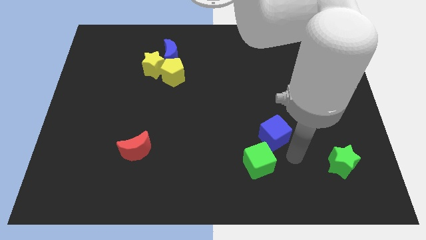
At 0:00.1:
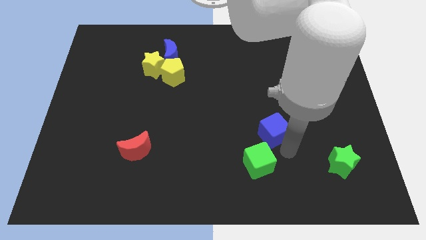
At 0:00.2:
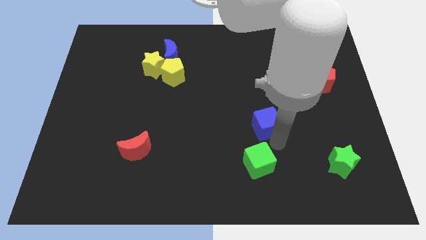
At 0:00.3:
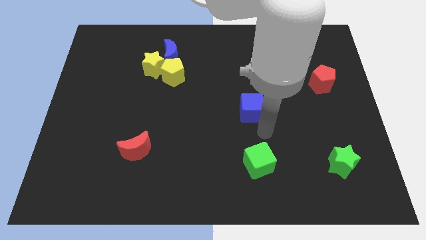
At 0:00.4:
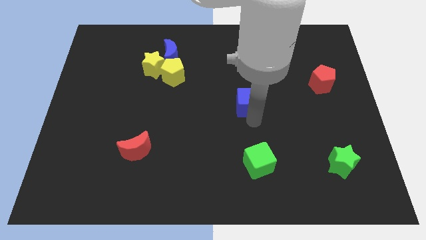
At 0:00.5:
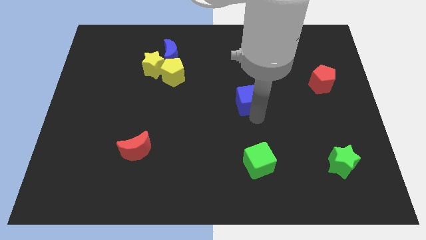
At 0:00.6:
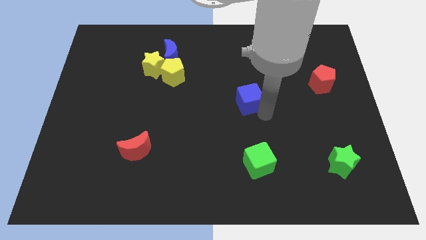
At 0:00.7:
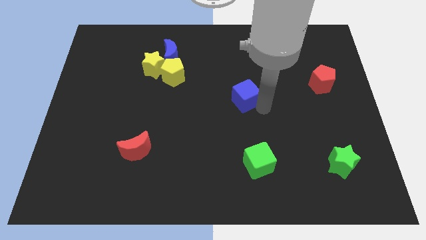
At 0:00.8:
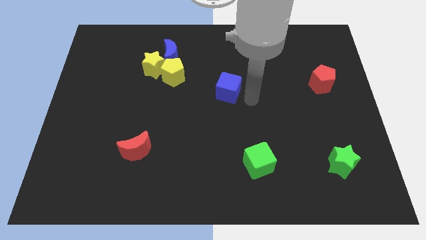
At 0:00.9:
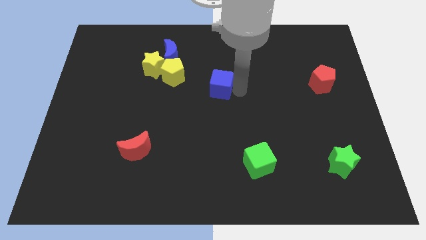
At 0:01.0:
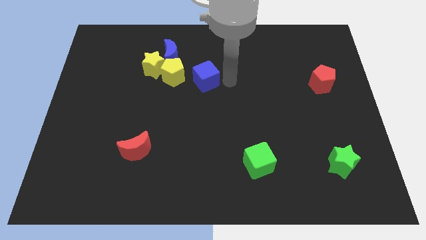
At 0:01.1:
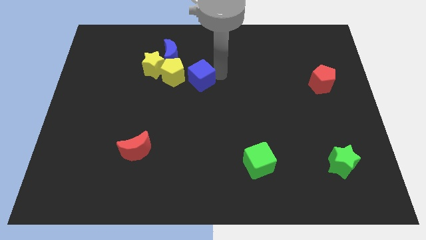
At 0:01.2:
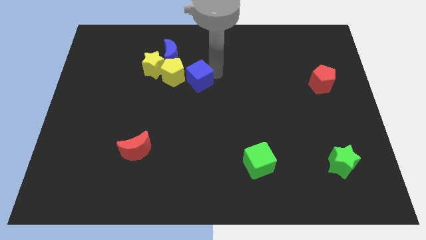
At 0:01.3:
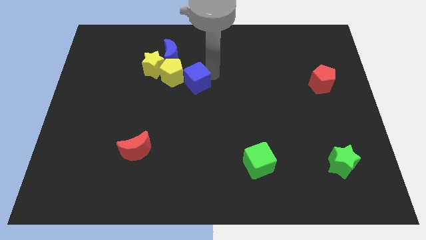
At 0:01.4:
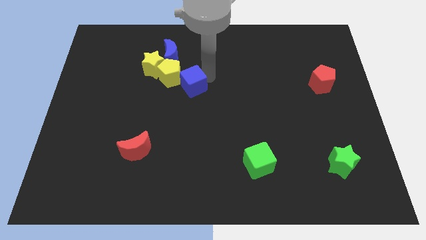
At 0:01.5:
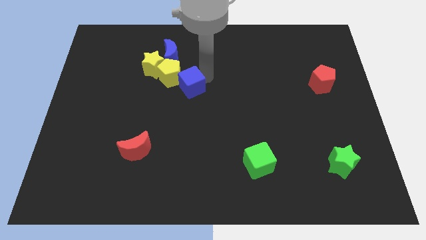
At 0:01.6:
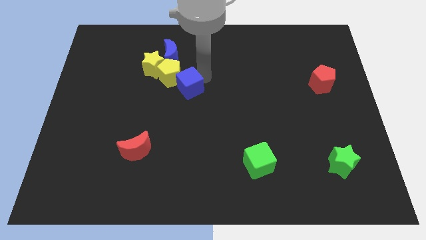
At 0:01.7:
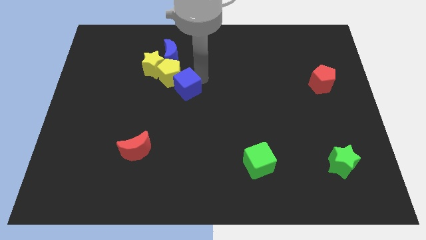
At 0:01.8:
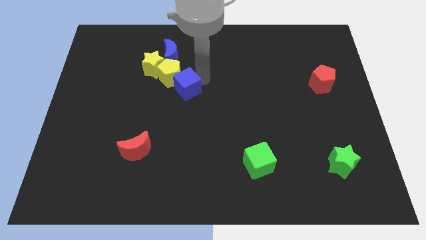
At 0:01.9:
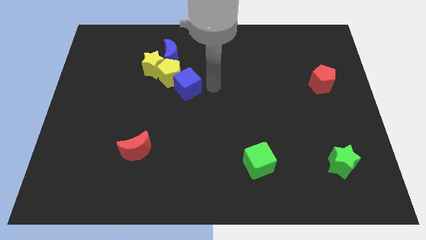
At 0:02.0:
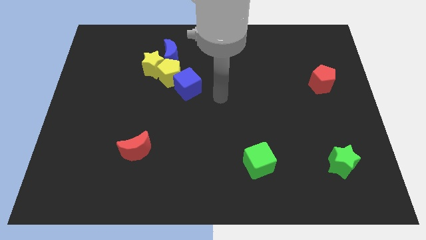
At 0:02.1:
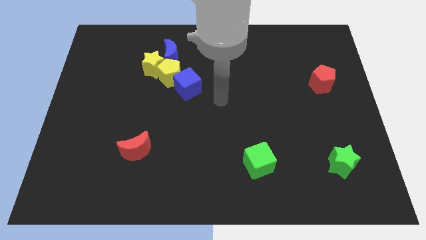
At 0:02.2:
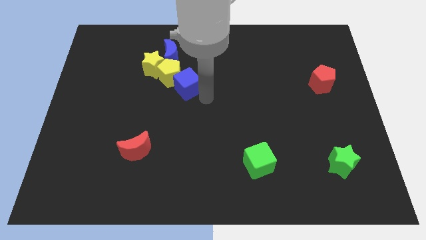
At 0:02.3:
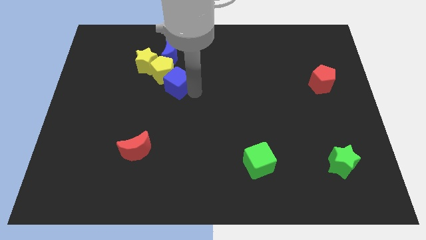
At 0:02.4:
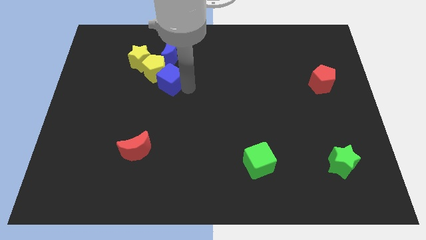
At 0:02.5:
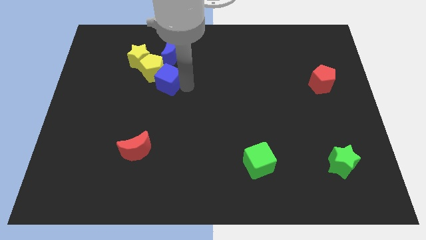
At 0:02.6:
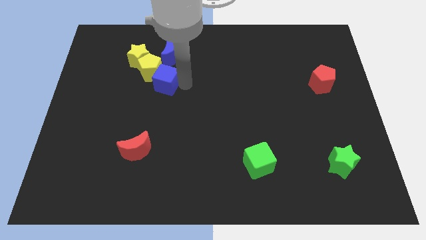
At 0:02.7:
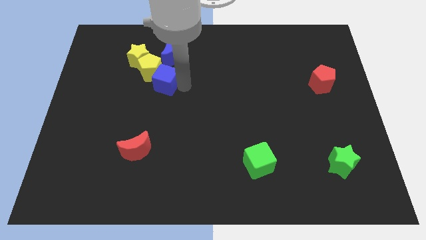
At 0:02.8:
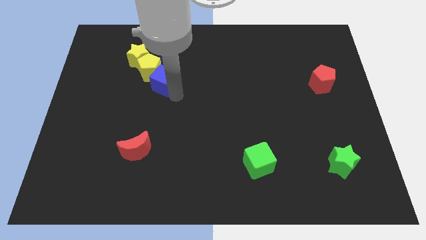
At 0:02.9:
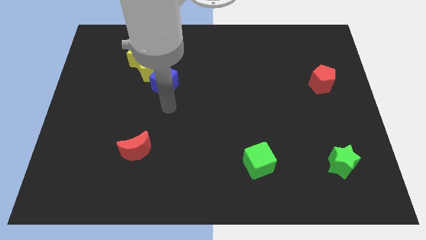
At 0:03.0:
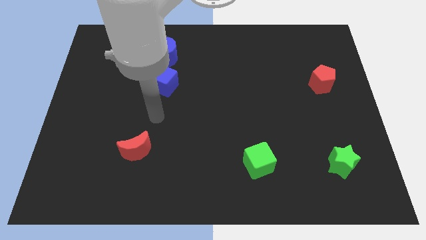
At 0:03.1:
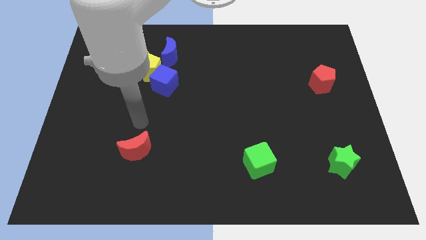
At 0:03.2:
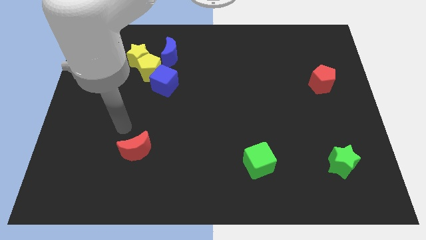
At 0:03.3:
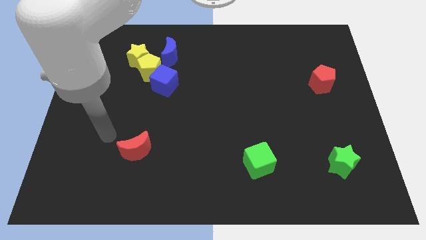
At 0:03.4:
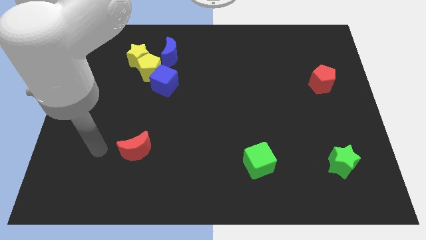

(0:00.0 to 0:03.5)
push the blue cube into the yellow pentagon

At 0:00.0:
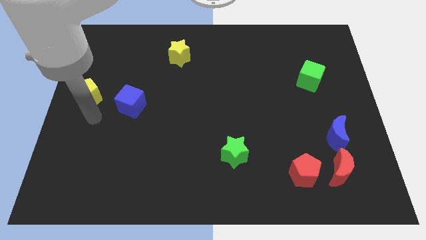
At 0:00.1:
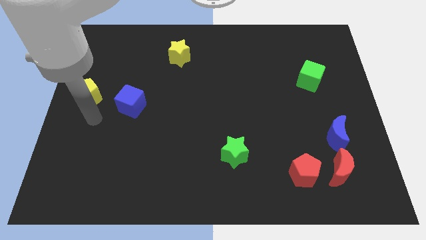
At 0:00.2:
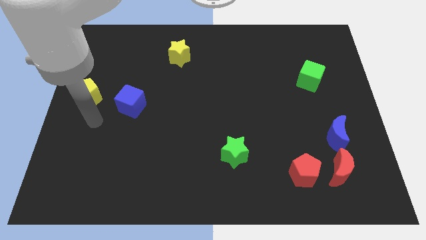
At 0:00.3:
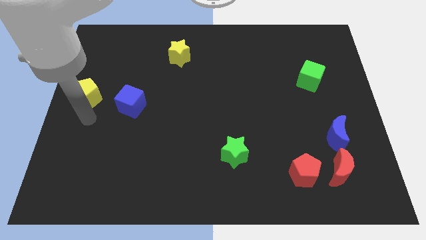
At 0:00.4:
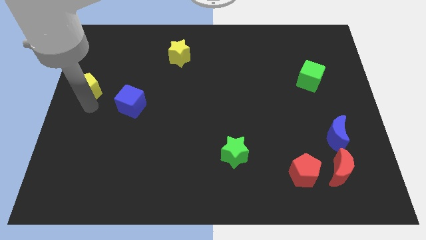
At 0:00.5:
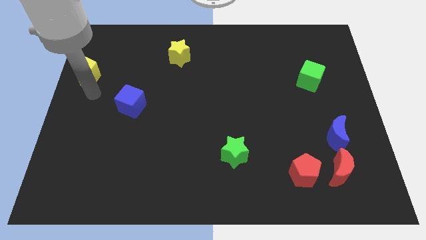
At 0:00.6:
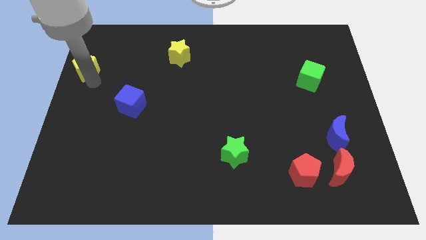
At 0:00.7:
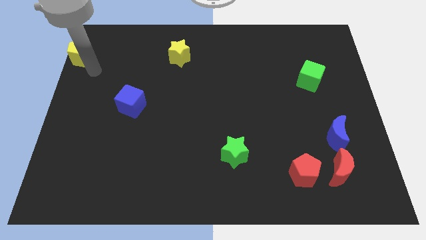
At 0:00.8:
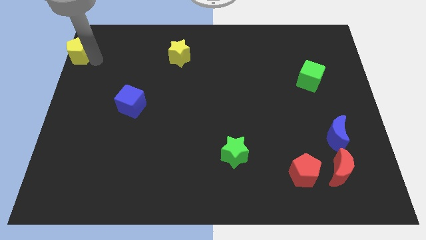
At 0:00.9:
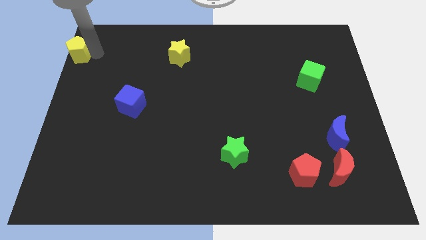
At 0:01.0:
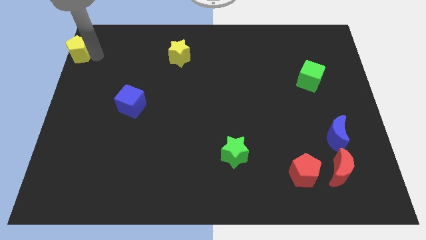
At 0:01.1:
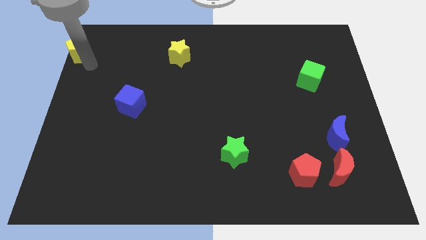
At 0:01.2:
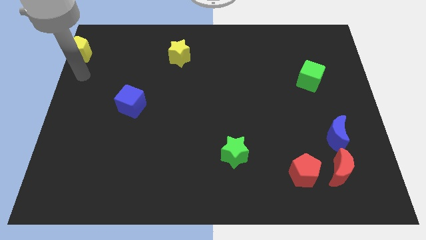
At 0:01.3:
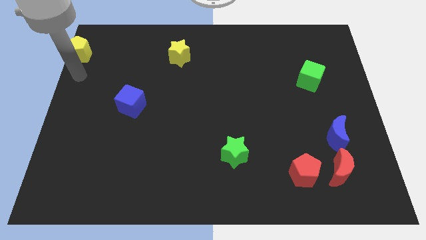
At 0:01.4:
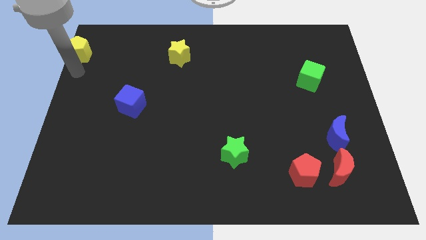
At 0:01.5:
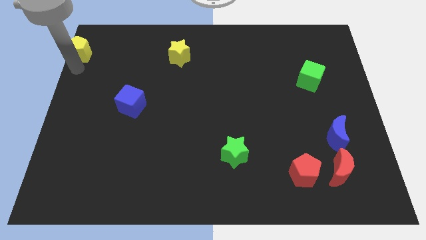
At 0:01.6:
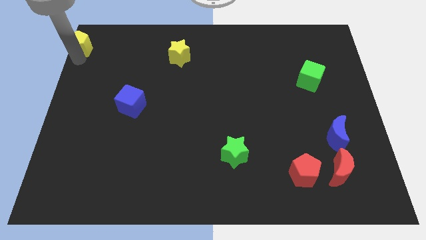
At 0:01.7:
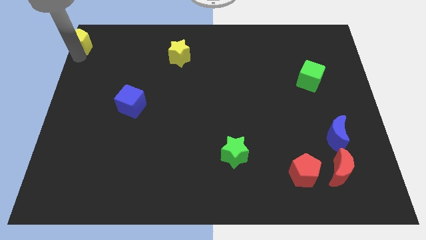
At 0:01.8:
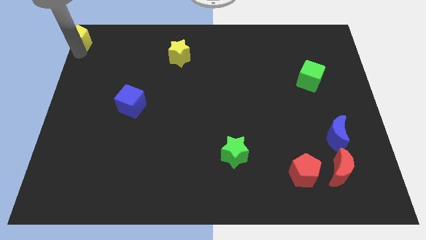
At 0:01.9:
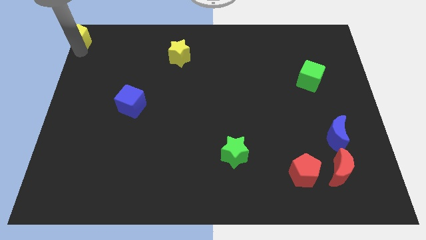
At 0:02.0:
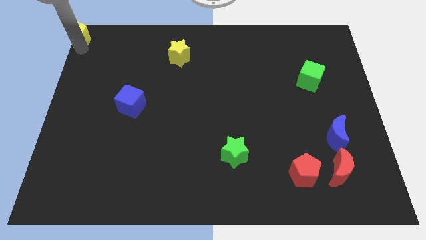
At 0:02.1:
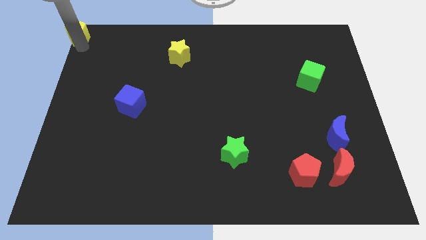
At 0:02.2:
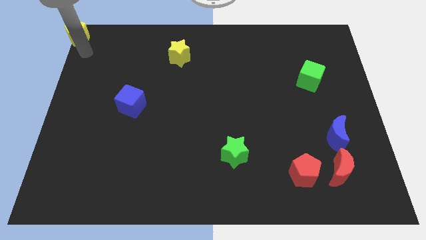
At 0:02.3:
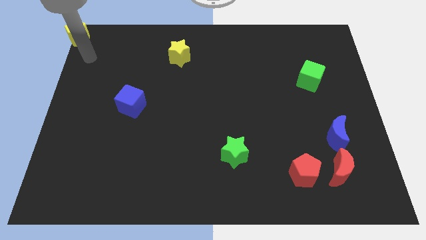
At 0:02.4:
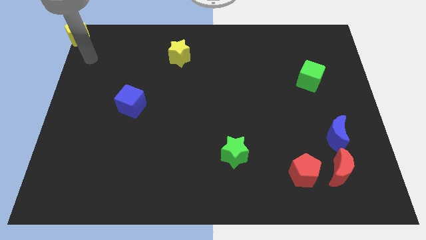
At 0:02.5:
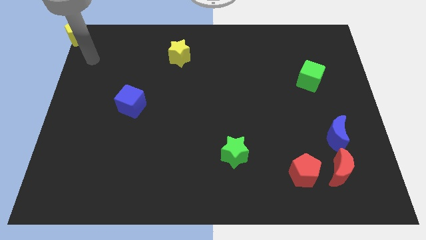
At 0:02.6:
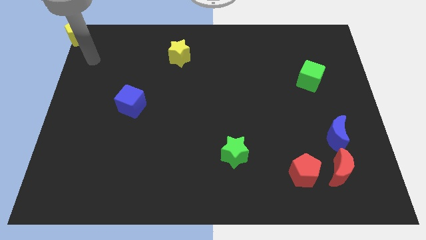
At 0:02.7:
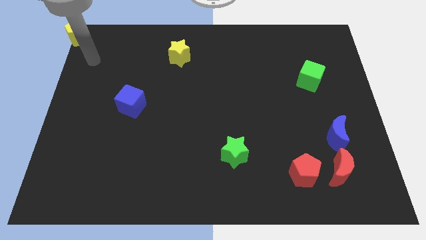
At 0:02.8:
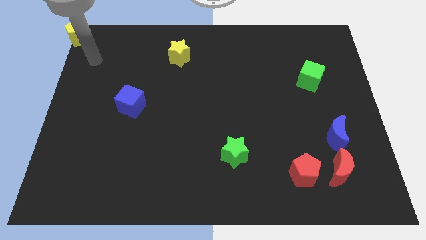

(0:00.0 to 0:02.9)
place yellow pentagon towards top left corner

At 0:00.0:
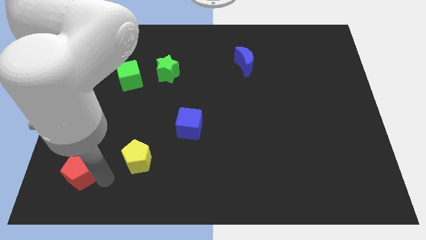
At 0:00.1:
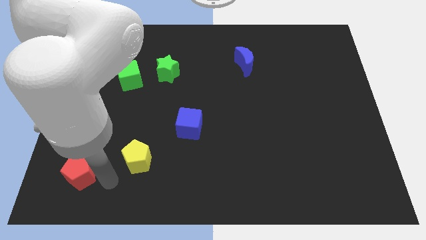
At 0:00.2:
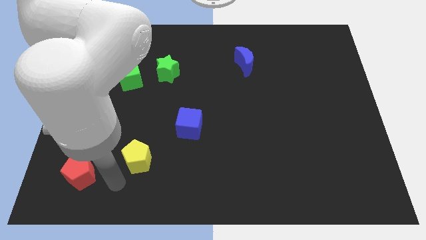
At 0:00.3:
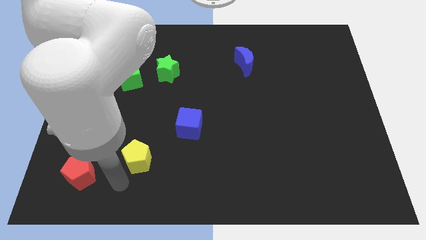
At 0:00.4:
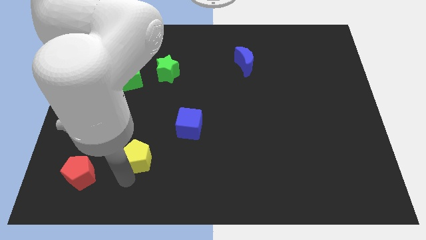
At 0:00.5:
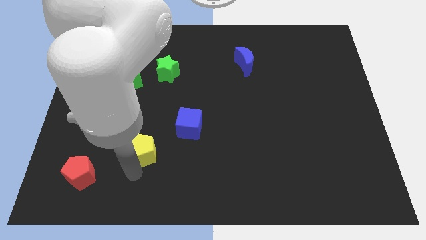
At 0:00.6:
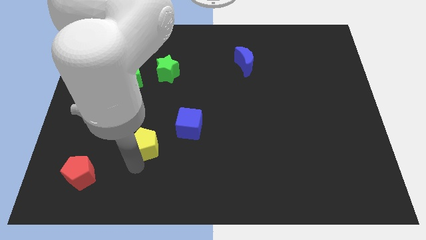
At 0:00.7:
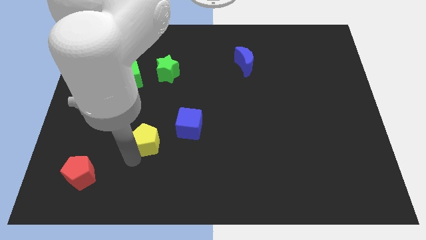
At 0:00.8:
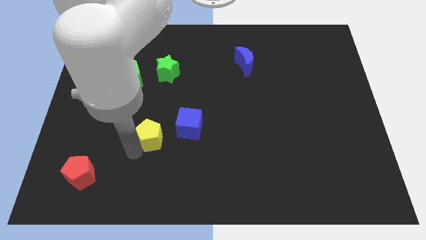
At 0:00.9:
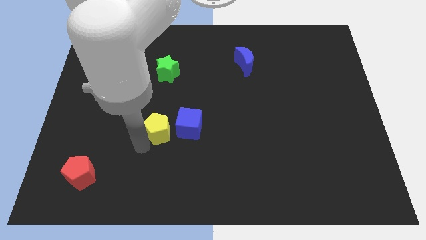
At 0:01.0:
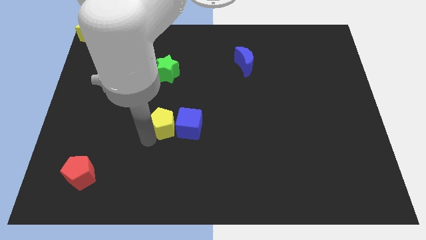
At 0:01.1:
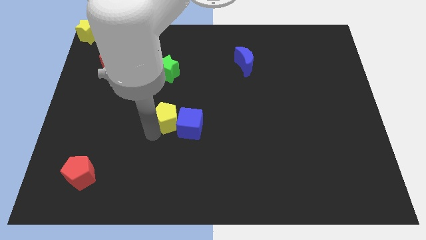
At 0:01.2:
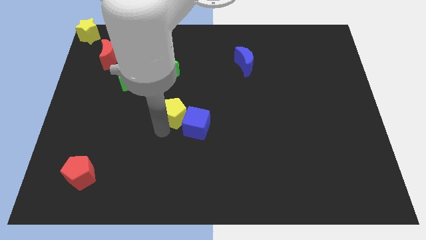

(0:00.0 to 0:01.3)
push the yellow pentagon into the blue cube

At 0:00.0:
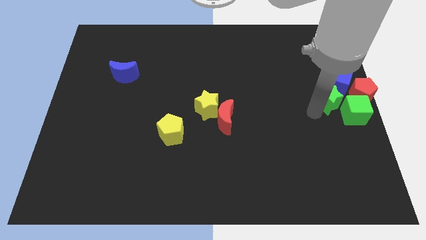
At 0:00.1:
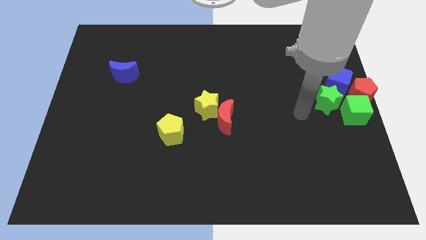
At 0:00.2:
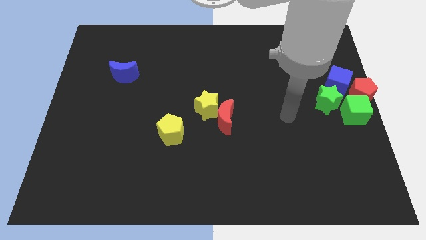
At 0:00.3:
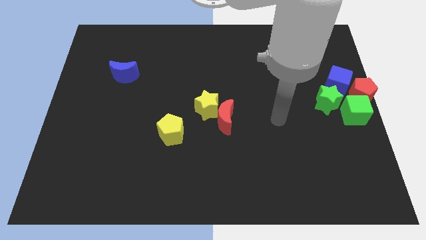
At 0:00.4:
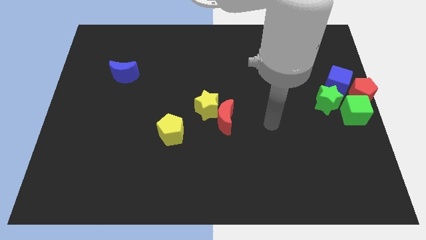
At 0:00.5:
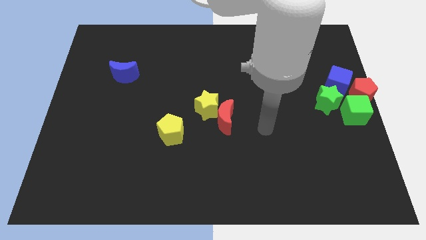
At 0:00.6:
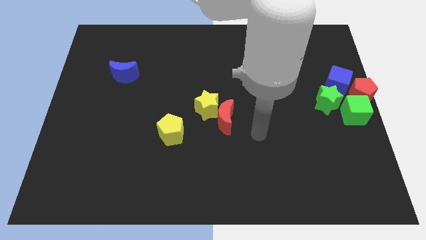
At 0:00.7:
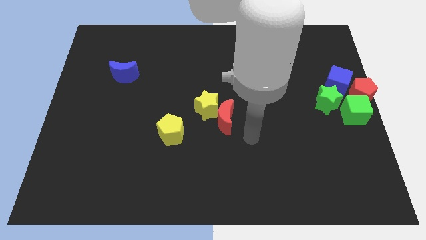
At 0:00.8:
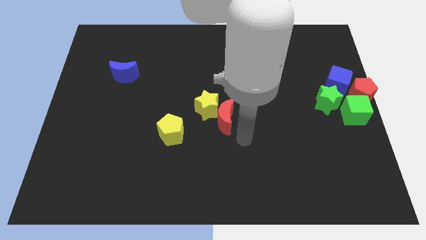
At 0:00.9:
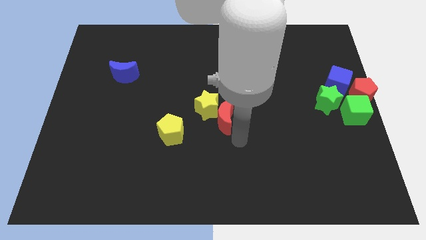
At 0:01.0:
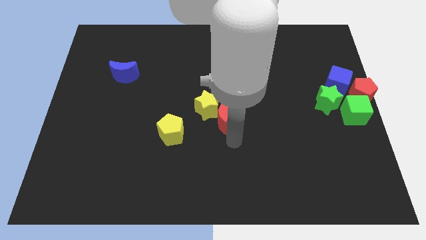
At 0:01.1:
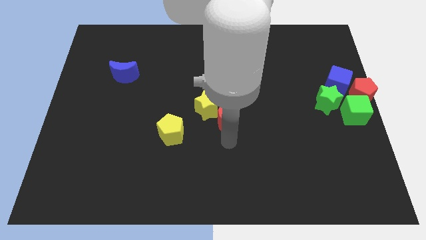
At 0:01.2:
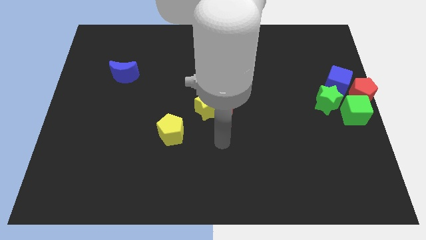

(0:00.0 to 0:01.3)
place your arm below red moon

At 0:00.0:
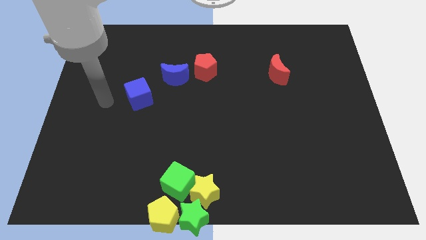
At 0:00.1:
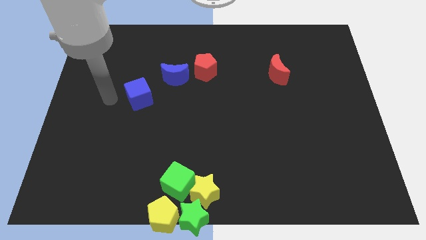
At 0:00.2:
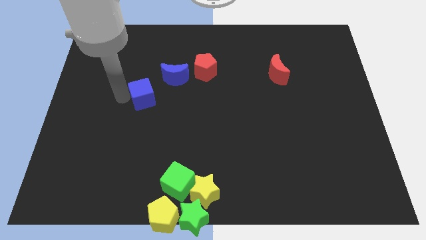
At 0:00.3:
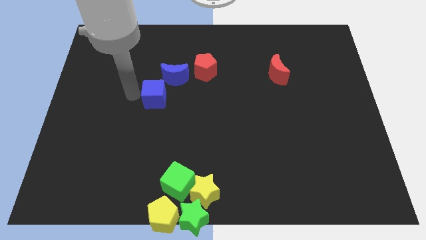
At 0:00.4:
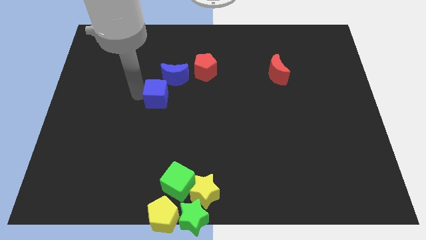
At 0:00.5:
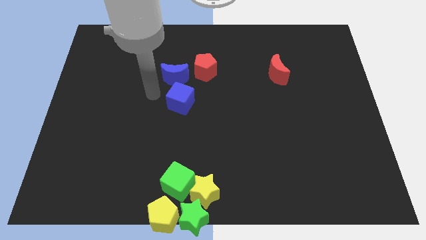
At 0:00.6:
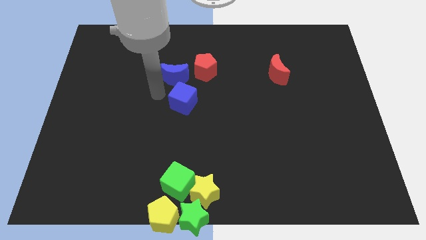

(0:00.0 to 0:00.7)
move the blue cube below the blue crescent
